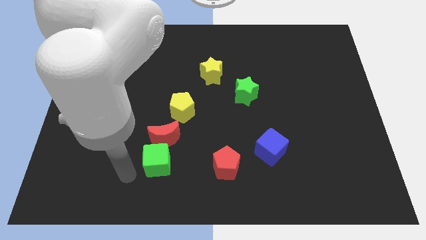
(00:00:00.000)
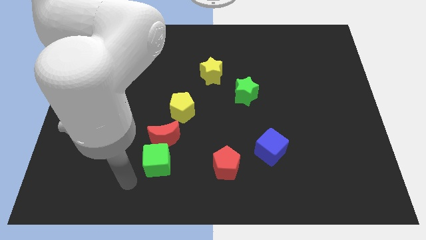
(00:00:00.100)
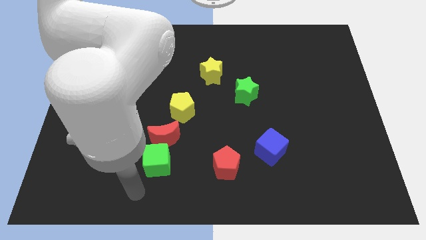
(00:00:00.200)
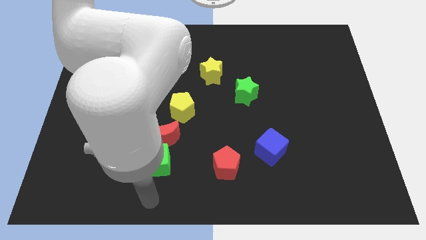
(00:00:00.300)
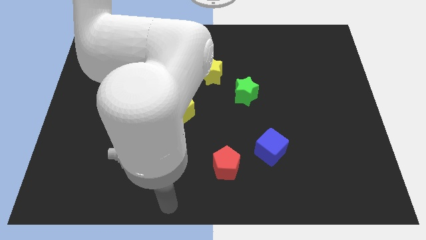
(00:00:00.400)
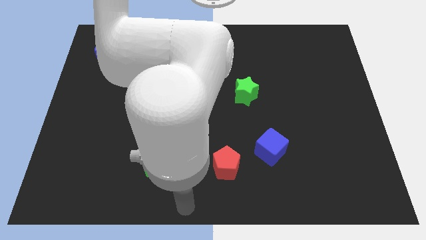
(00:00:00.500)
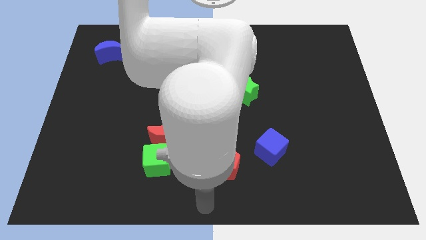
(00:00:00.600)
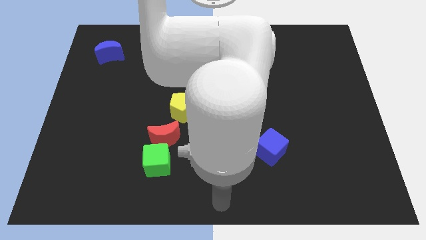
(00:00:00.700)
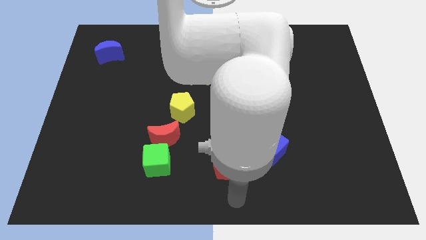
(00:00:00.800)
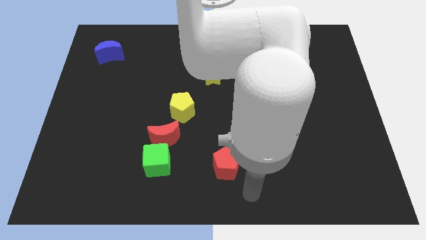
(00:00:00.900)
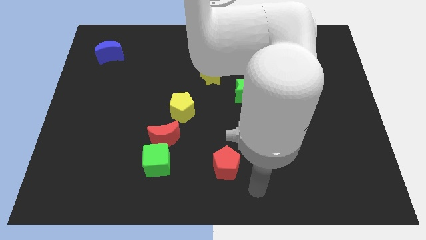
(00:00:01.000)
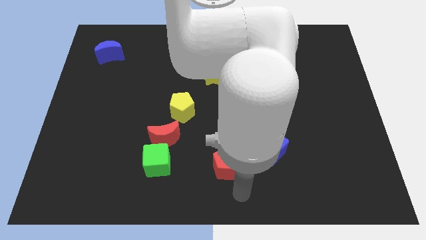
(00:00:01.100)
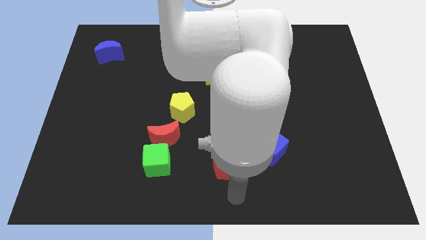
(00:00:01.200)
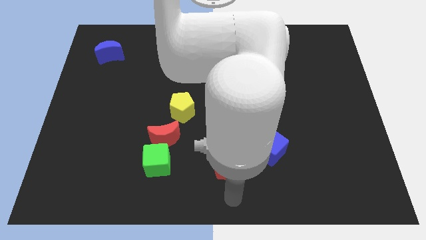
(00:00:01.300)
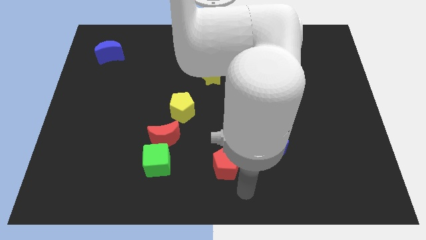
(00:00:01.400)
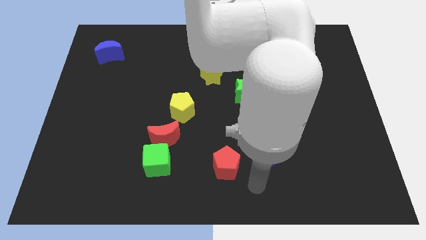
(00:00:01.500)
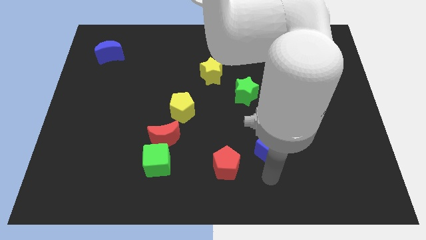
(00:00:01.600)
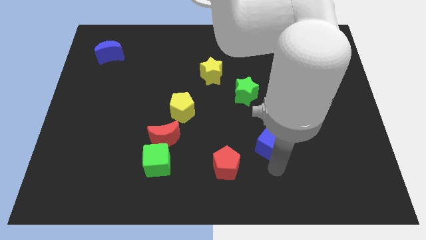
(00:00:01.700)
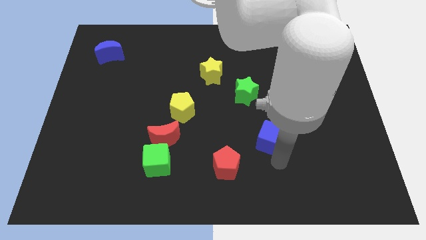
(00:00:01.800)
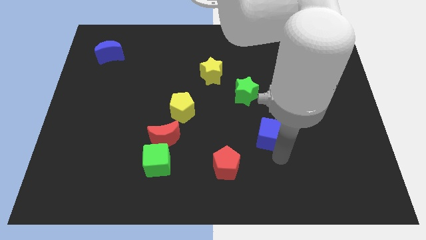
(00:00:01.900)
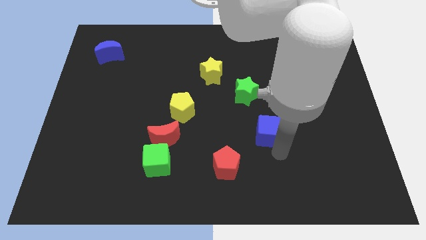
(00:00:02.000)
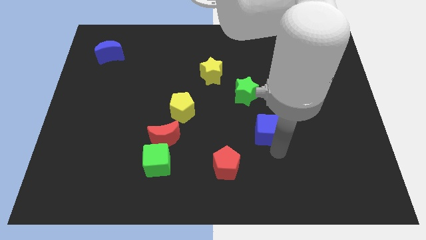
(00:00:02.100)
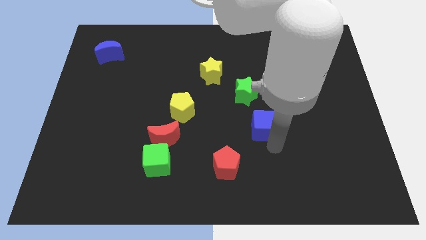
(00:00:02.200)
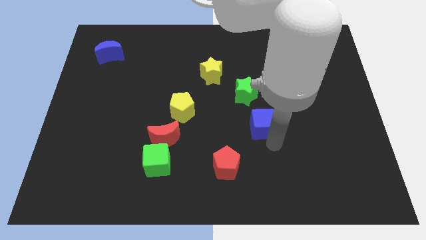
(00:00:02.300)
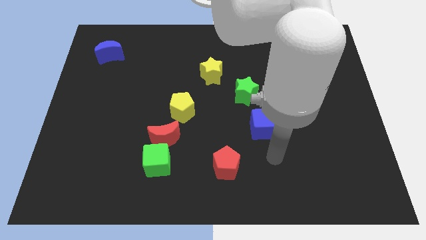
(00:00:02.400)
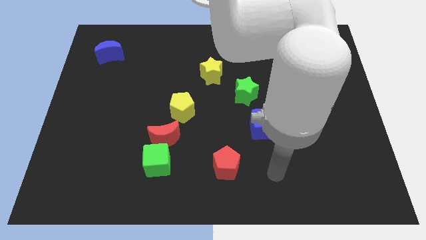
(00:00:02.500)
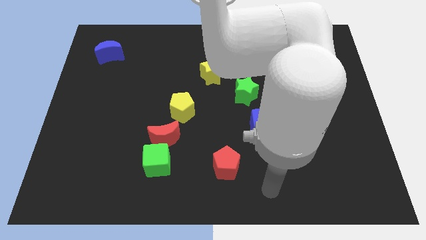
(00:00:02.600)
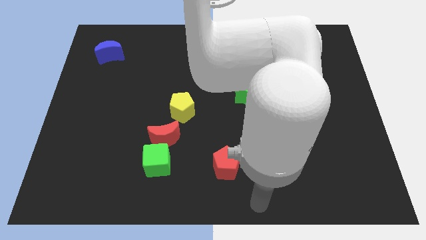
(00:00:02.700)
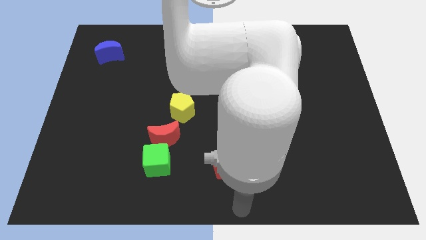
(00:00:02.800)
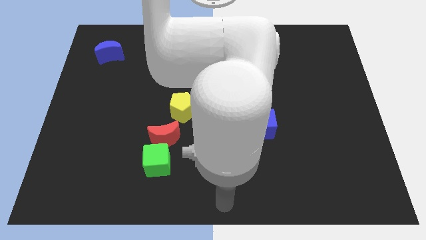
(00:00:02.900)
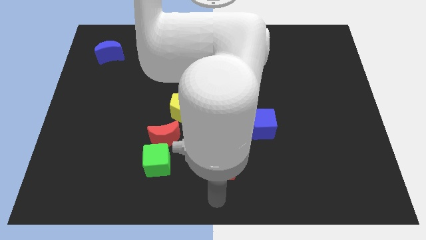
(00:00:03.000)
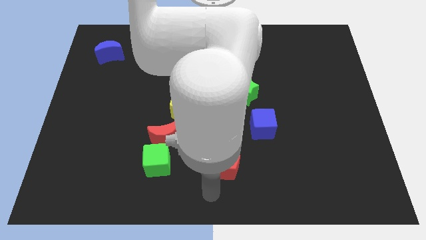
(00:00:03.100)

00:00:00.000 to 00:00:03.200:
move the blue cube diagonal to the red pentagon

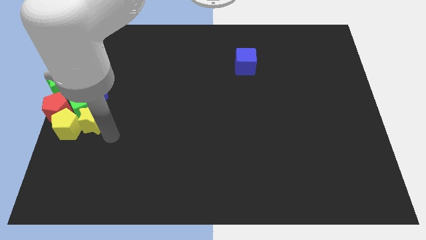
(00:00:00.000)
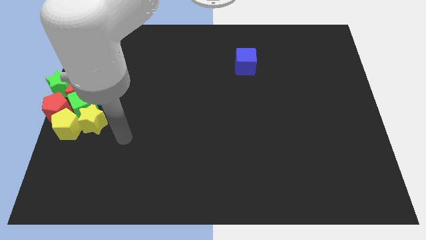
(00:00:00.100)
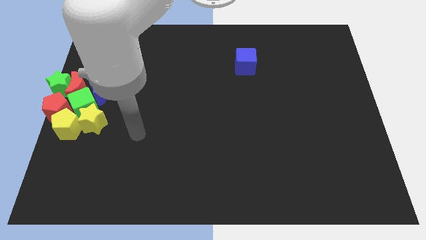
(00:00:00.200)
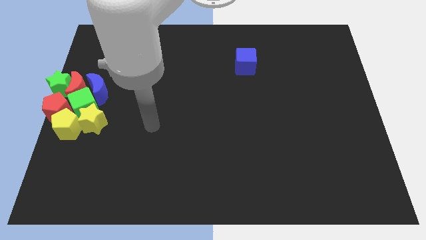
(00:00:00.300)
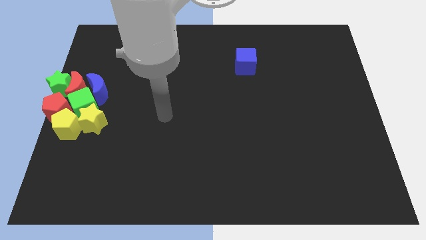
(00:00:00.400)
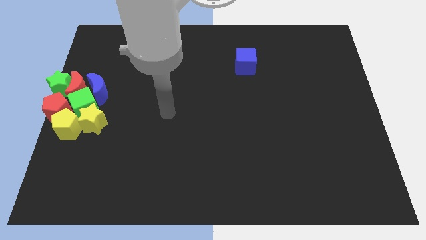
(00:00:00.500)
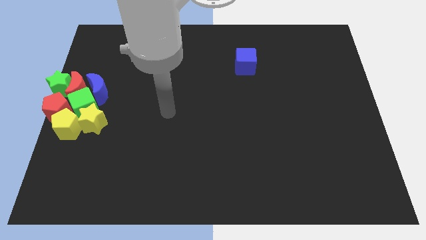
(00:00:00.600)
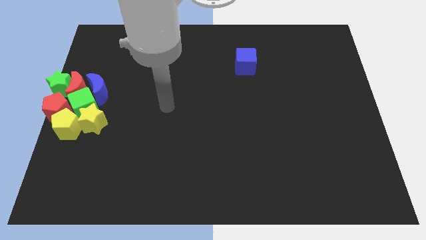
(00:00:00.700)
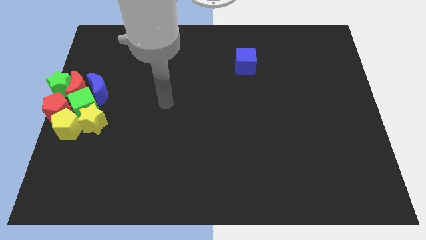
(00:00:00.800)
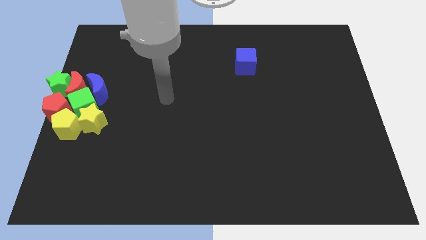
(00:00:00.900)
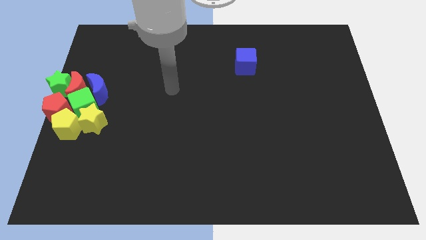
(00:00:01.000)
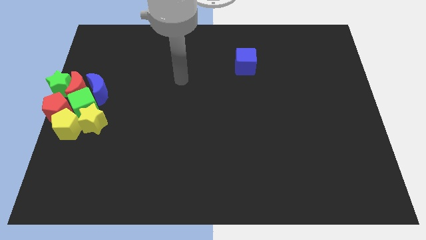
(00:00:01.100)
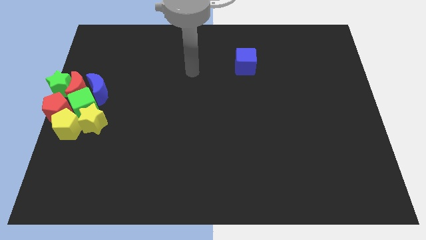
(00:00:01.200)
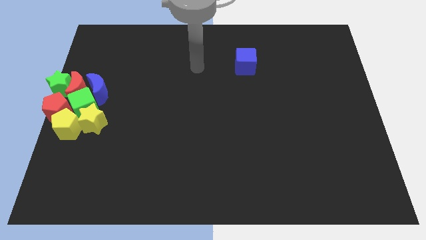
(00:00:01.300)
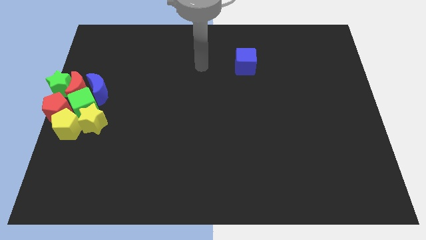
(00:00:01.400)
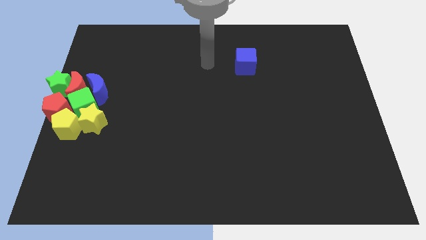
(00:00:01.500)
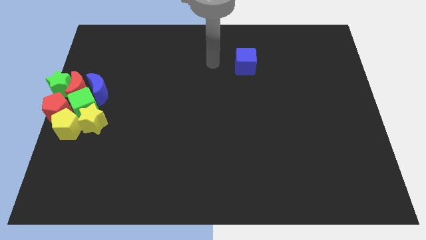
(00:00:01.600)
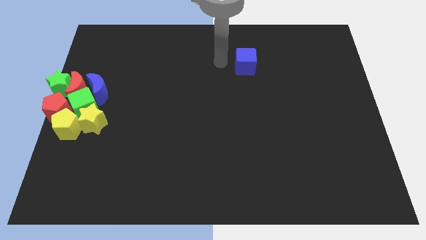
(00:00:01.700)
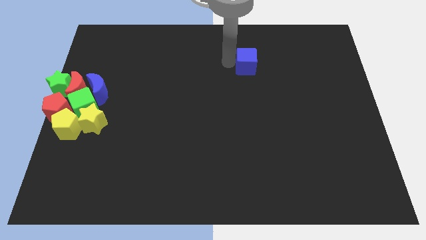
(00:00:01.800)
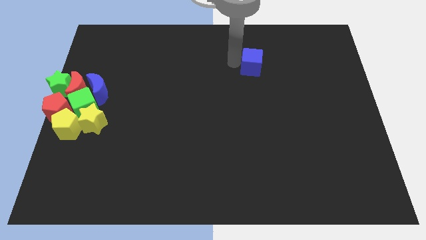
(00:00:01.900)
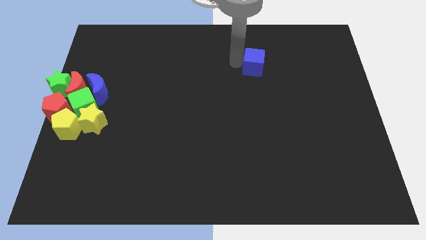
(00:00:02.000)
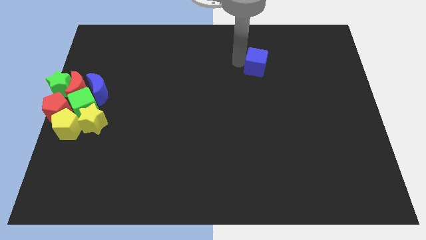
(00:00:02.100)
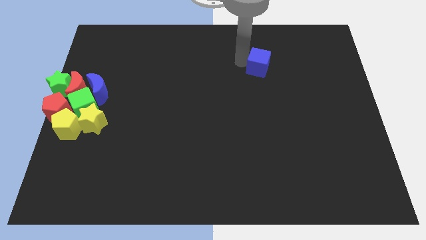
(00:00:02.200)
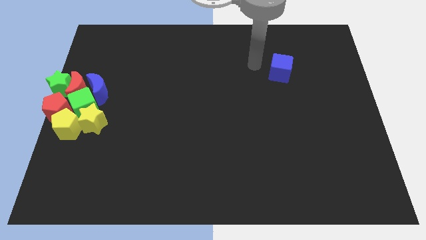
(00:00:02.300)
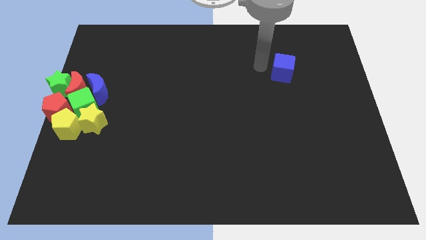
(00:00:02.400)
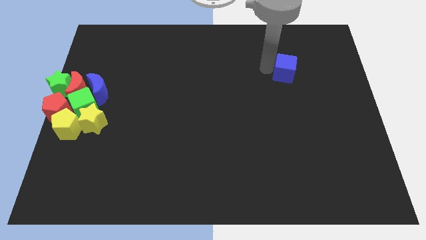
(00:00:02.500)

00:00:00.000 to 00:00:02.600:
slightly move the blue cube to the right

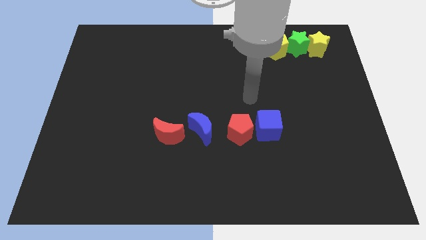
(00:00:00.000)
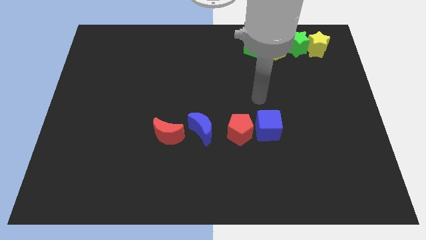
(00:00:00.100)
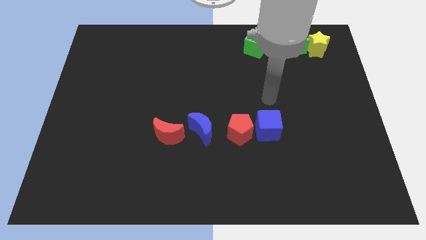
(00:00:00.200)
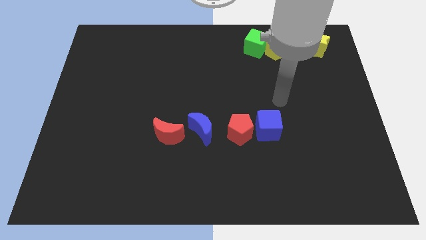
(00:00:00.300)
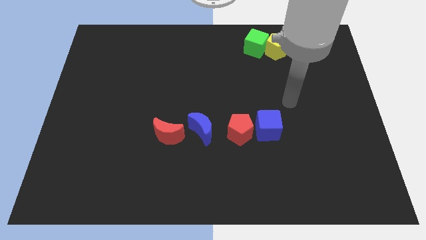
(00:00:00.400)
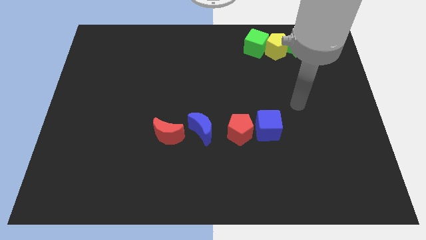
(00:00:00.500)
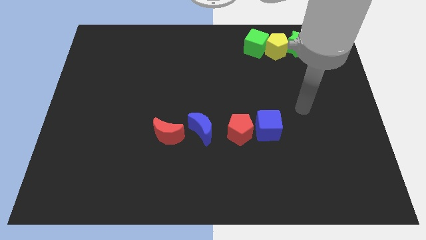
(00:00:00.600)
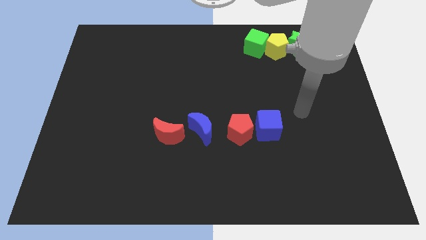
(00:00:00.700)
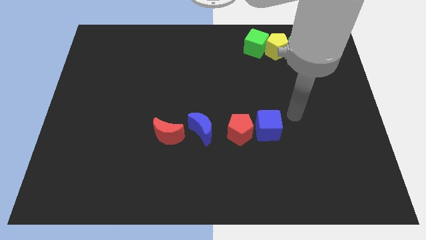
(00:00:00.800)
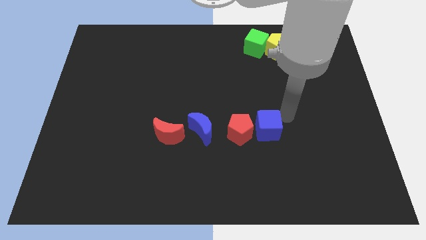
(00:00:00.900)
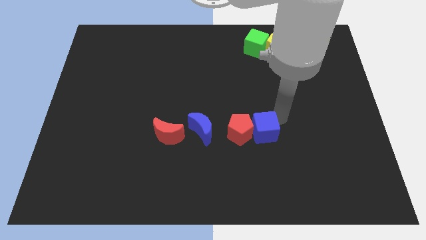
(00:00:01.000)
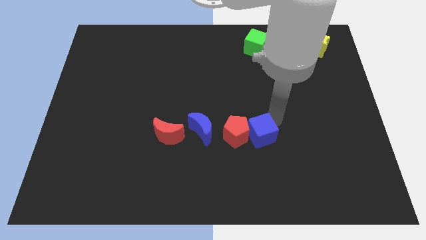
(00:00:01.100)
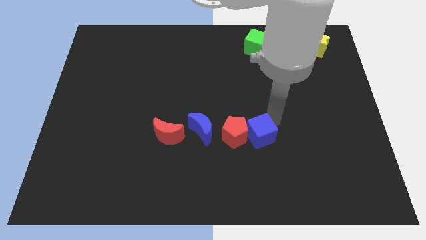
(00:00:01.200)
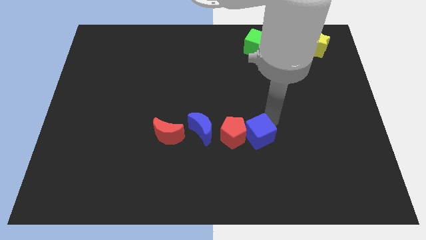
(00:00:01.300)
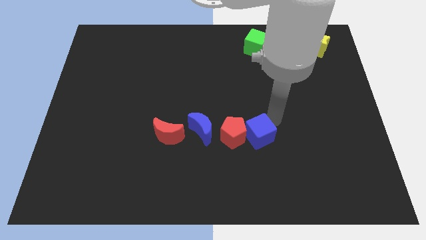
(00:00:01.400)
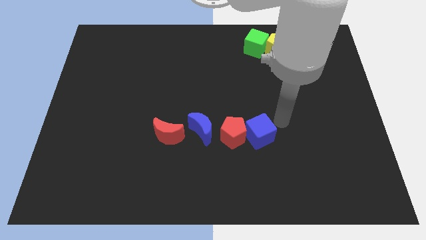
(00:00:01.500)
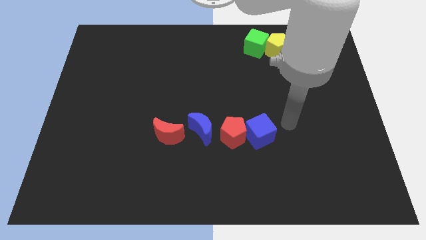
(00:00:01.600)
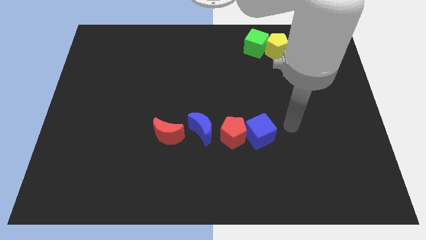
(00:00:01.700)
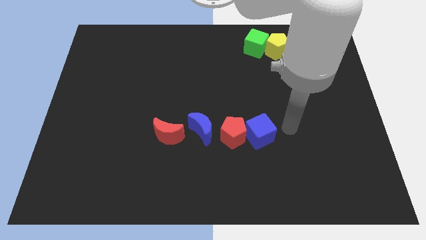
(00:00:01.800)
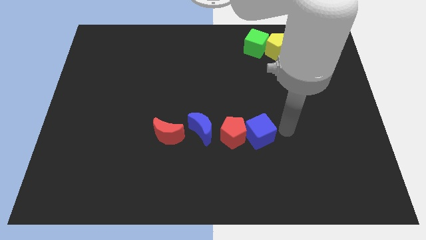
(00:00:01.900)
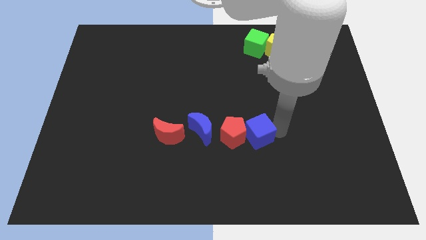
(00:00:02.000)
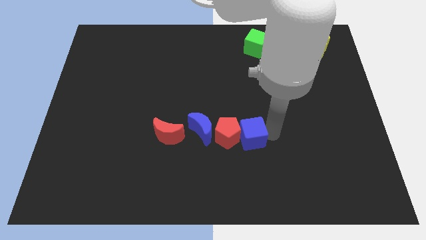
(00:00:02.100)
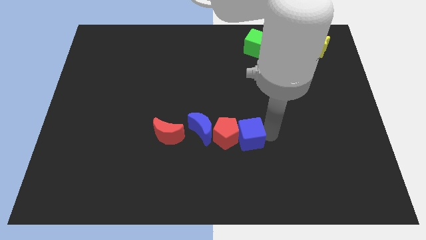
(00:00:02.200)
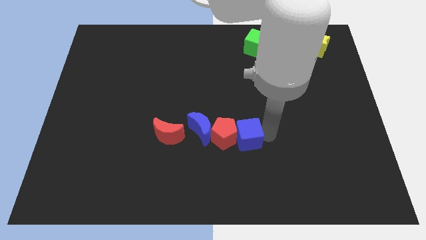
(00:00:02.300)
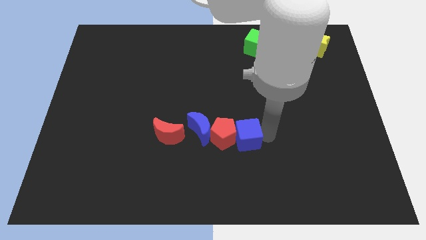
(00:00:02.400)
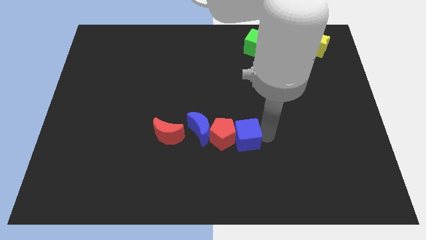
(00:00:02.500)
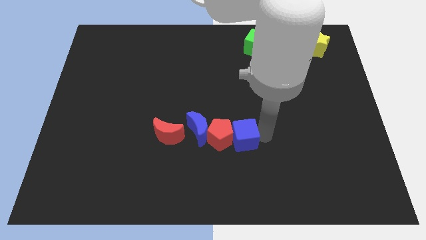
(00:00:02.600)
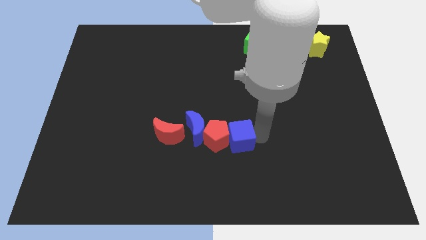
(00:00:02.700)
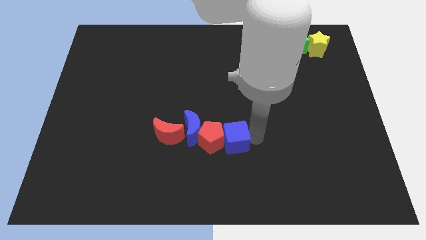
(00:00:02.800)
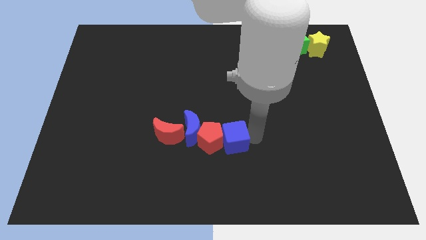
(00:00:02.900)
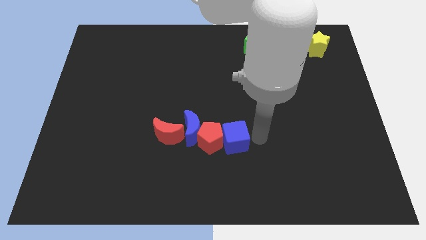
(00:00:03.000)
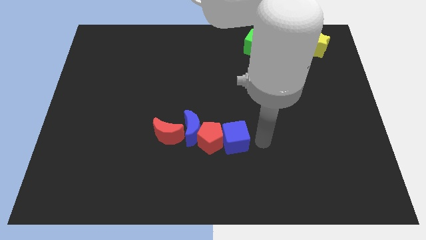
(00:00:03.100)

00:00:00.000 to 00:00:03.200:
push blue cube towards the red pentagon
